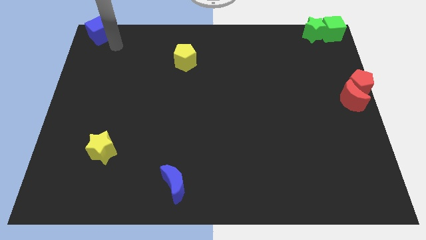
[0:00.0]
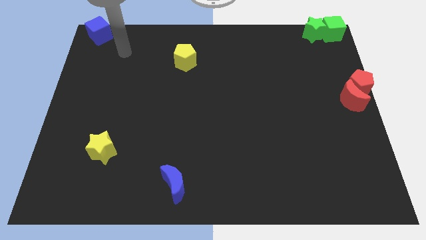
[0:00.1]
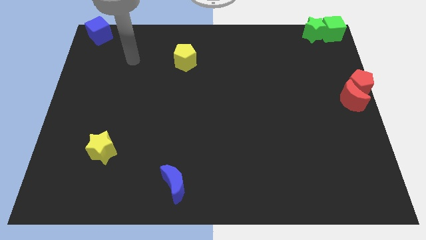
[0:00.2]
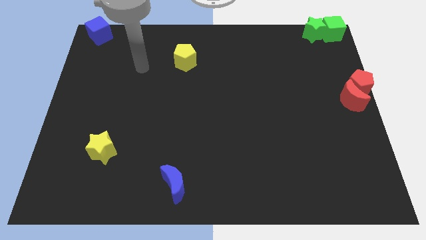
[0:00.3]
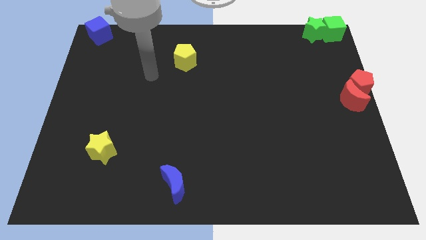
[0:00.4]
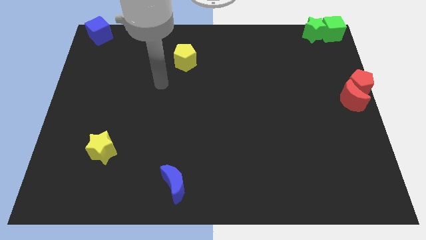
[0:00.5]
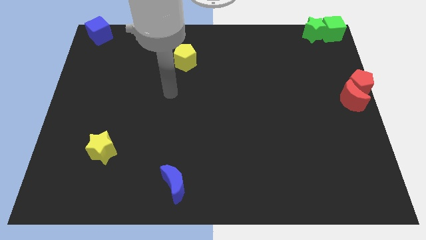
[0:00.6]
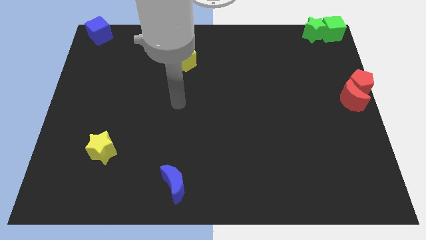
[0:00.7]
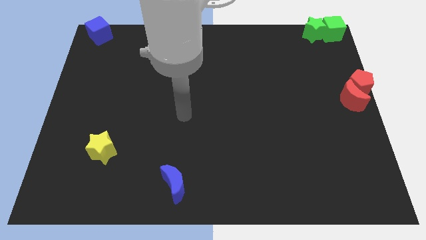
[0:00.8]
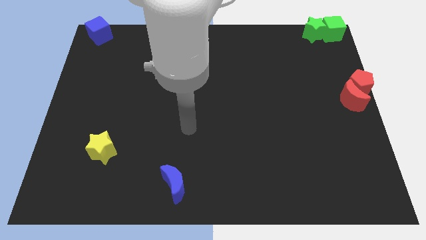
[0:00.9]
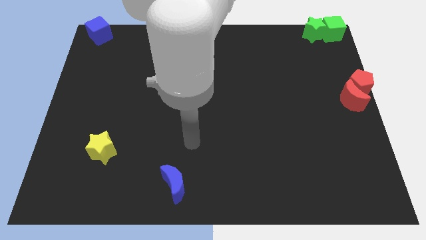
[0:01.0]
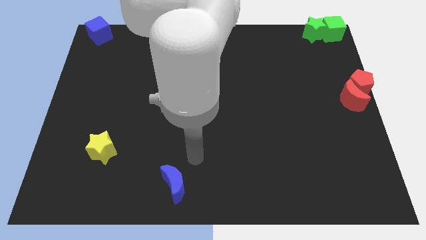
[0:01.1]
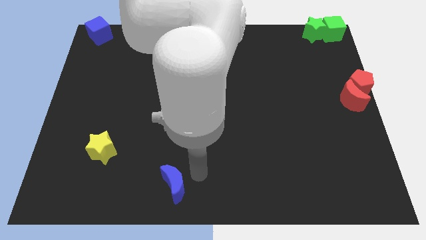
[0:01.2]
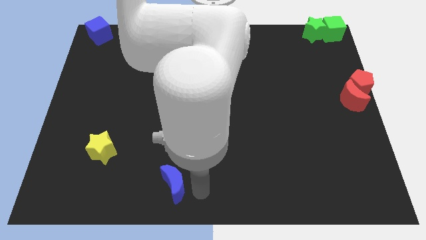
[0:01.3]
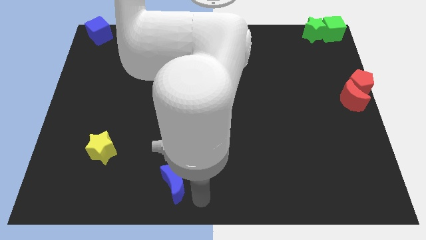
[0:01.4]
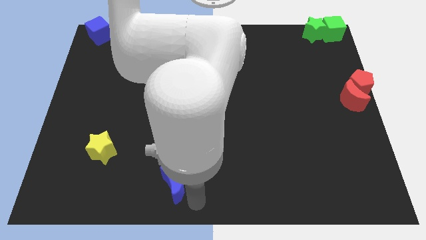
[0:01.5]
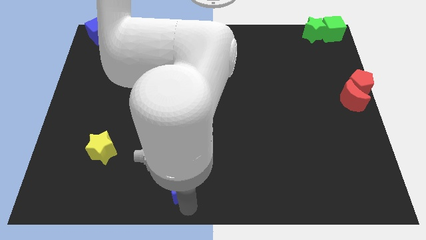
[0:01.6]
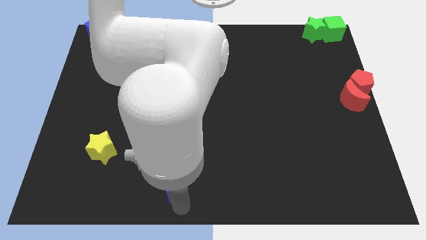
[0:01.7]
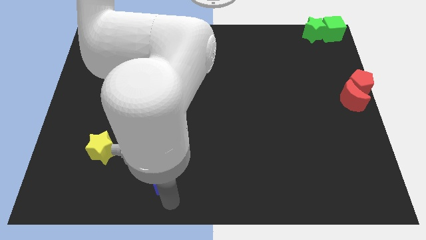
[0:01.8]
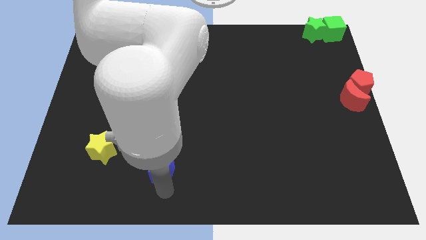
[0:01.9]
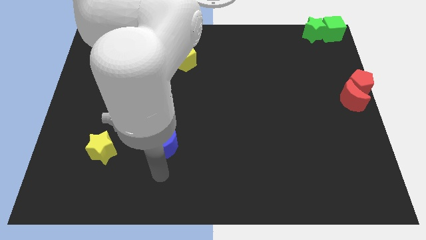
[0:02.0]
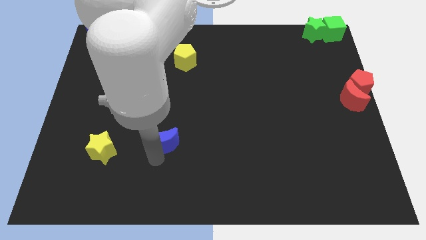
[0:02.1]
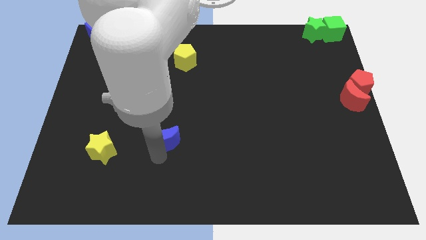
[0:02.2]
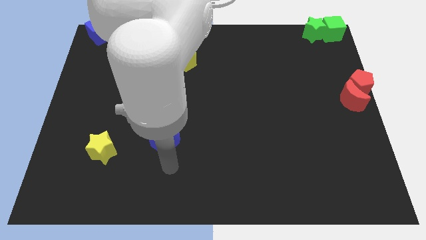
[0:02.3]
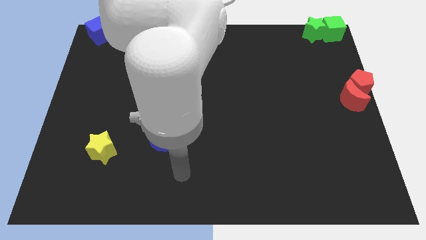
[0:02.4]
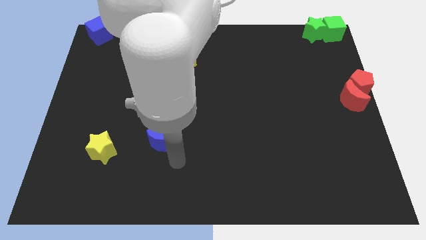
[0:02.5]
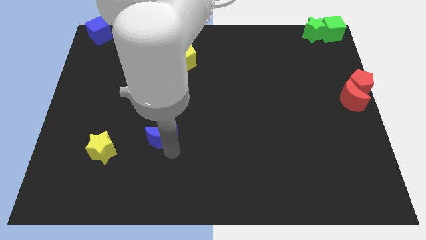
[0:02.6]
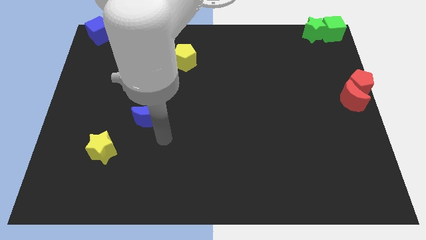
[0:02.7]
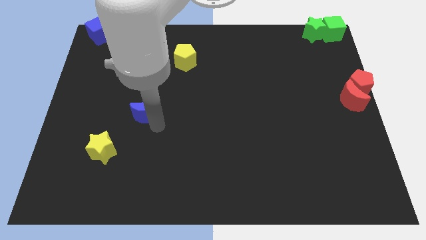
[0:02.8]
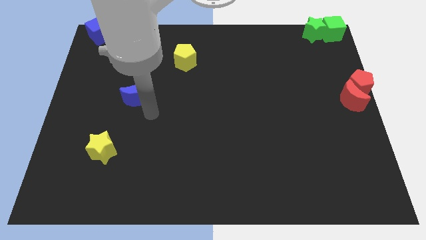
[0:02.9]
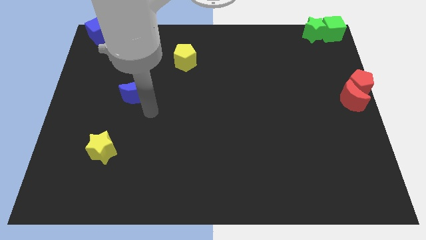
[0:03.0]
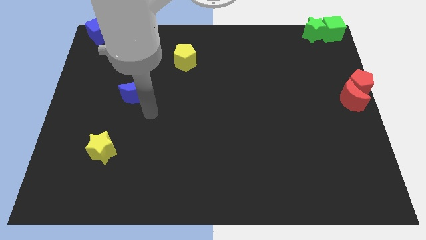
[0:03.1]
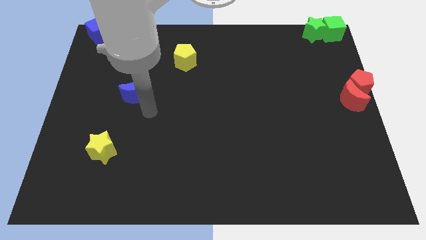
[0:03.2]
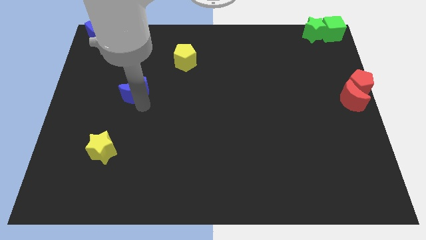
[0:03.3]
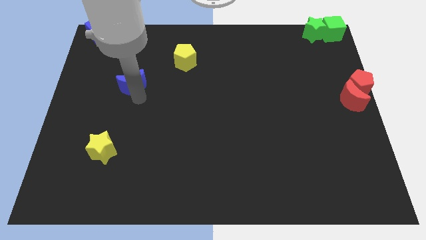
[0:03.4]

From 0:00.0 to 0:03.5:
place the blue crescent diagonally in between the yellow blocks

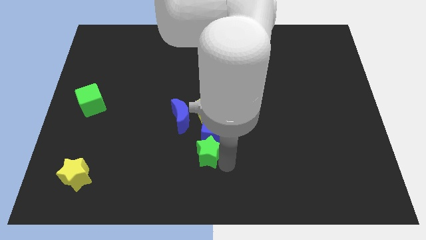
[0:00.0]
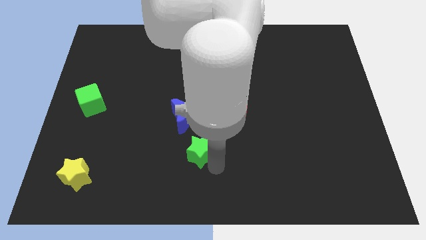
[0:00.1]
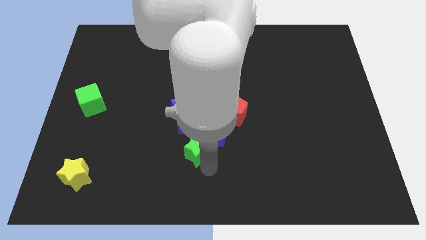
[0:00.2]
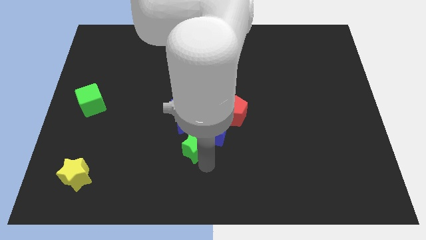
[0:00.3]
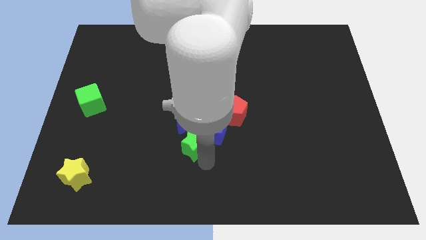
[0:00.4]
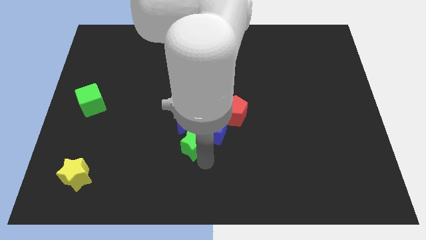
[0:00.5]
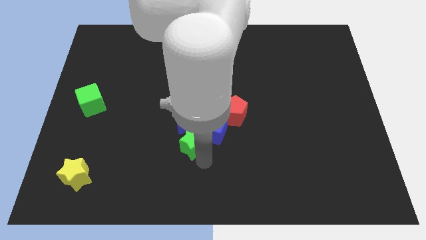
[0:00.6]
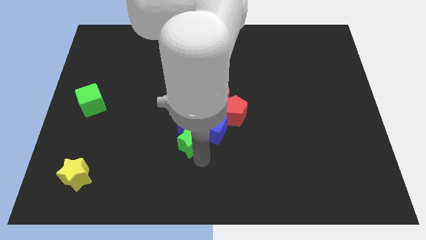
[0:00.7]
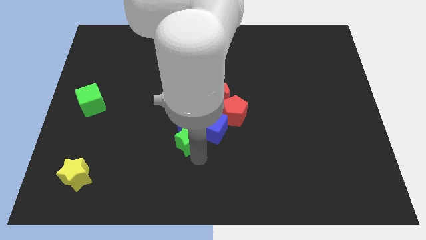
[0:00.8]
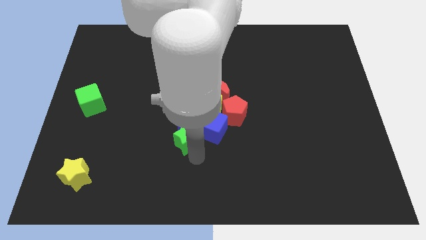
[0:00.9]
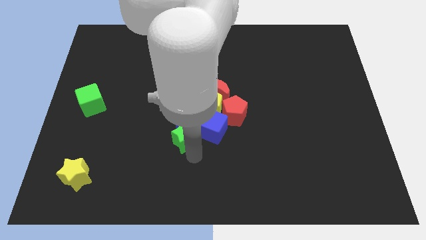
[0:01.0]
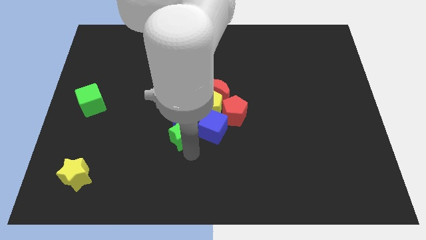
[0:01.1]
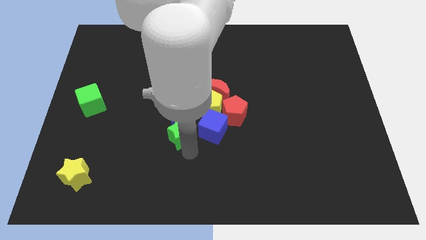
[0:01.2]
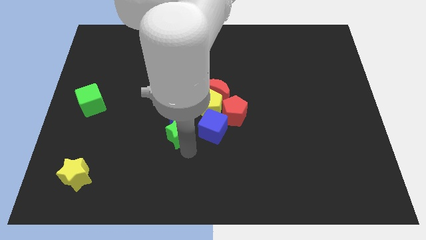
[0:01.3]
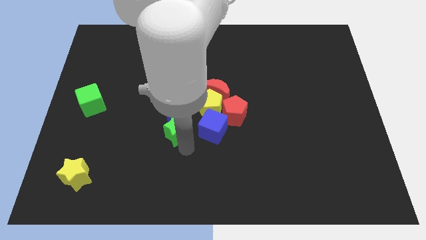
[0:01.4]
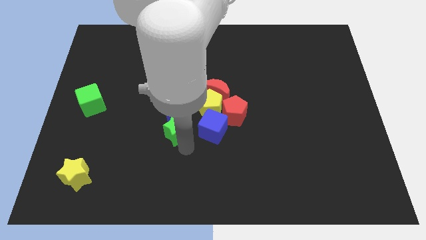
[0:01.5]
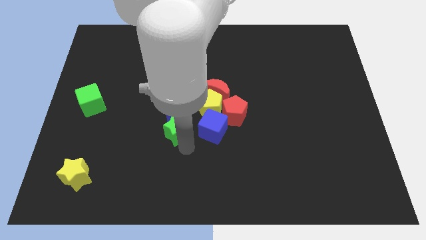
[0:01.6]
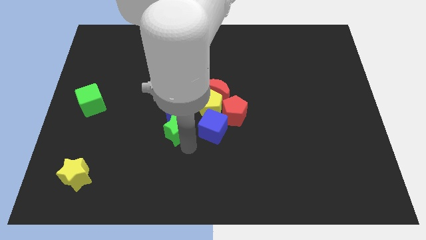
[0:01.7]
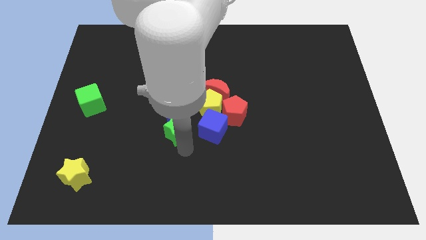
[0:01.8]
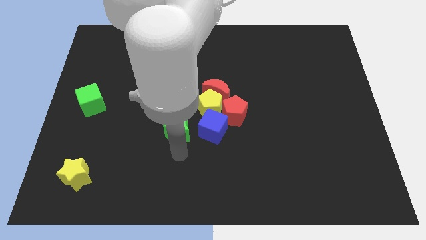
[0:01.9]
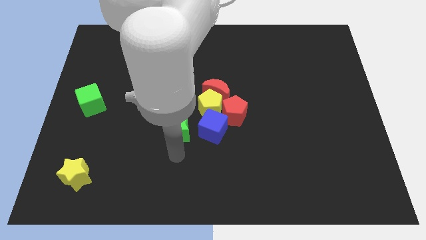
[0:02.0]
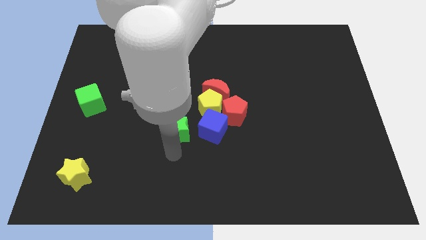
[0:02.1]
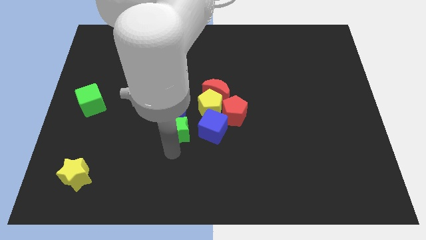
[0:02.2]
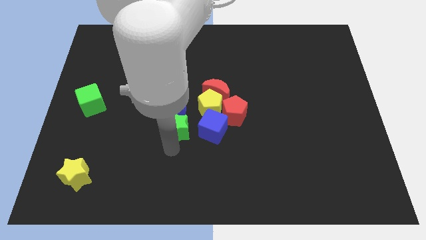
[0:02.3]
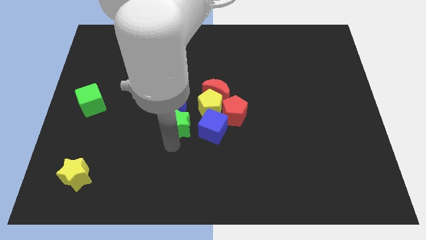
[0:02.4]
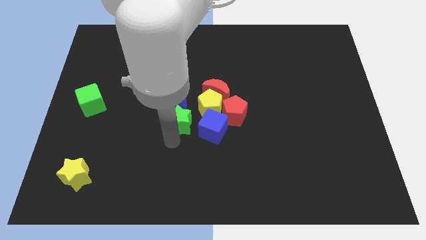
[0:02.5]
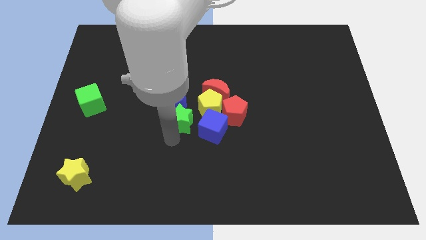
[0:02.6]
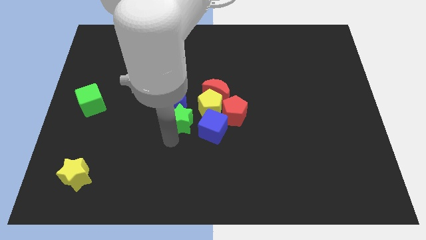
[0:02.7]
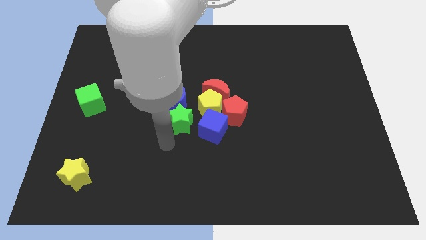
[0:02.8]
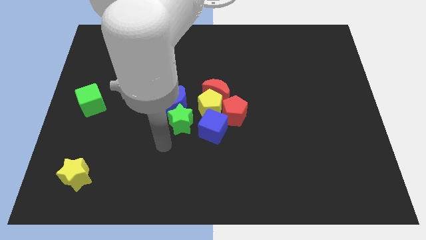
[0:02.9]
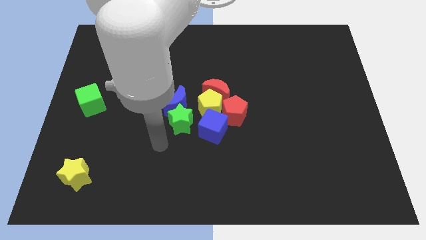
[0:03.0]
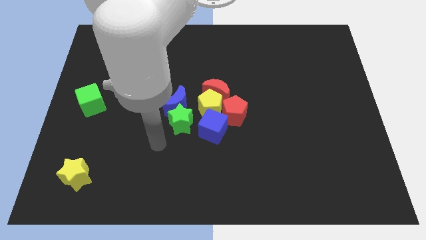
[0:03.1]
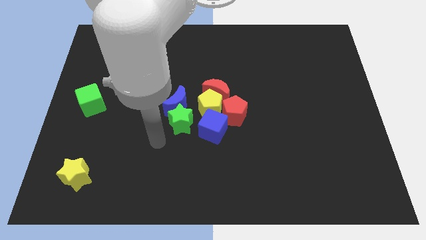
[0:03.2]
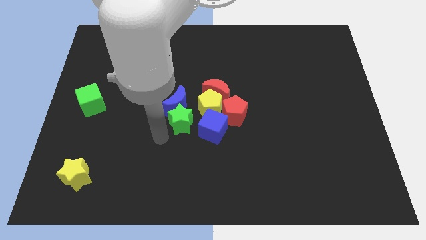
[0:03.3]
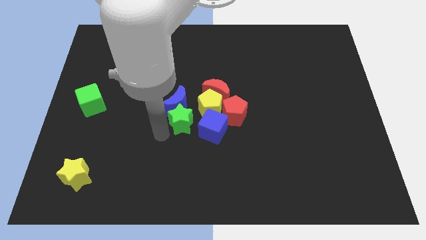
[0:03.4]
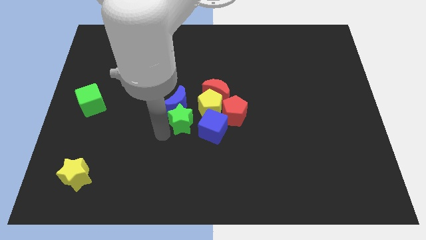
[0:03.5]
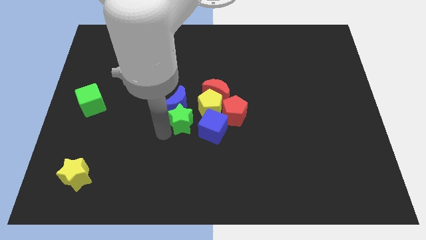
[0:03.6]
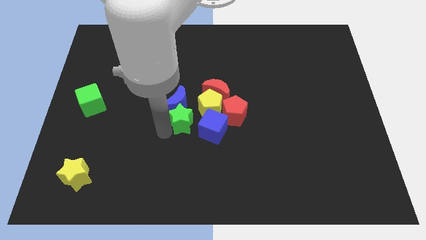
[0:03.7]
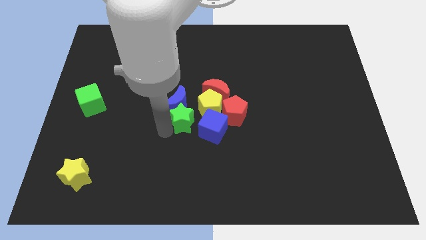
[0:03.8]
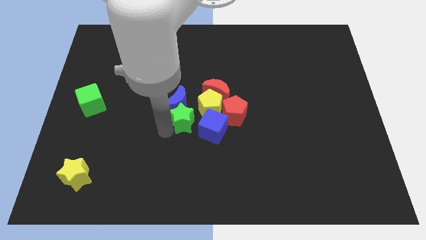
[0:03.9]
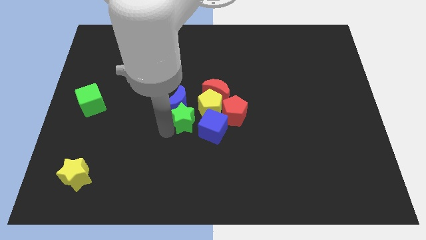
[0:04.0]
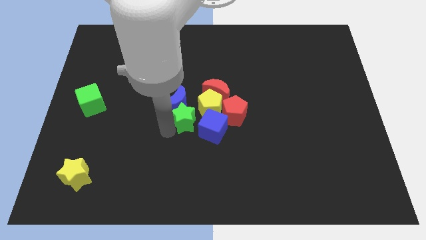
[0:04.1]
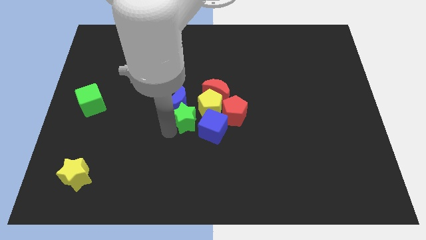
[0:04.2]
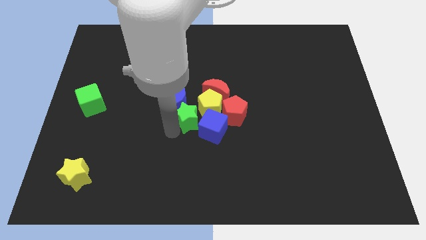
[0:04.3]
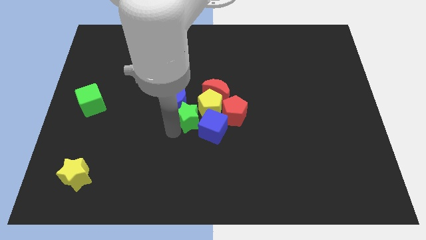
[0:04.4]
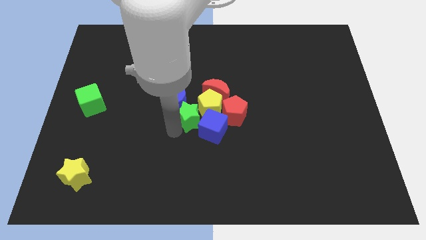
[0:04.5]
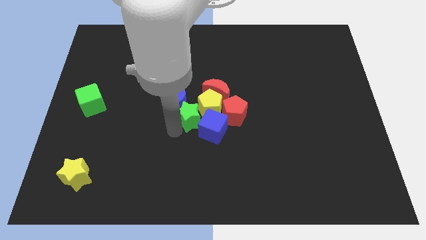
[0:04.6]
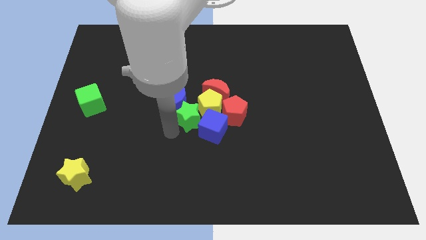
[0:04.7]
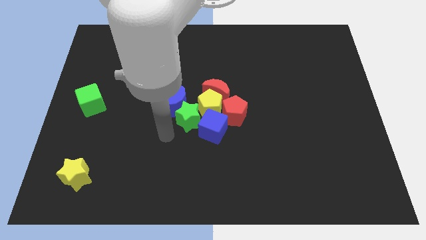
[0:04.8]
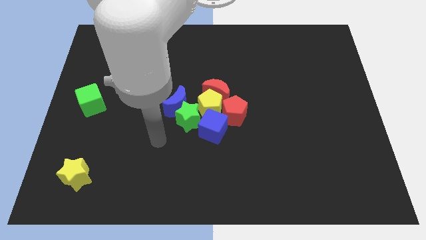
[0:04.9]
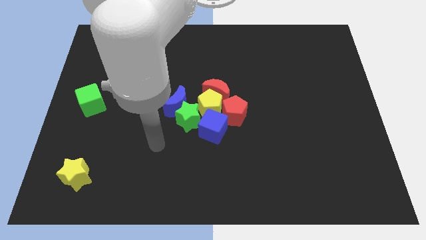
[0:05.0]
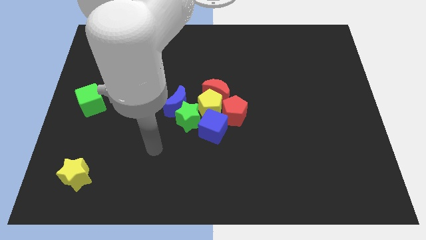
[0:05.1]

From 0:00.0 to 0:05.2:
move the green star into the yellow pentagon

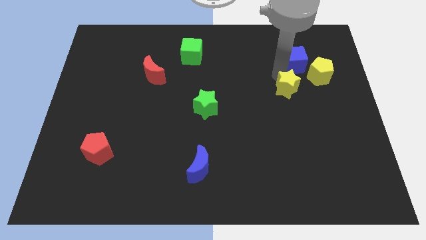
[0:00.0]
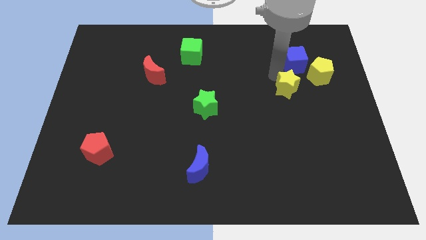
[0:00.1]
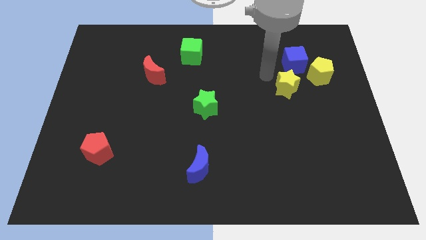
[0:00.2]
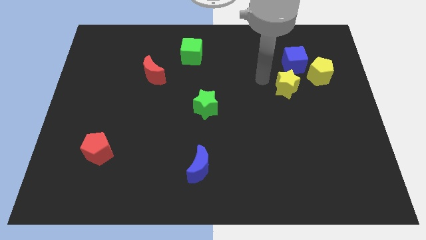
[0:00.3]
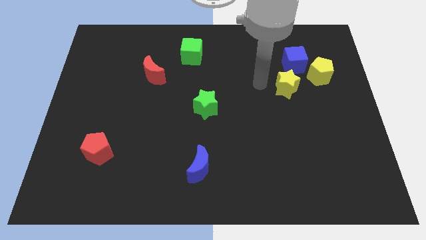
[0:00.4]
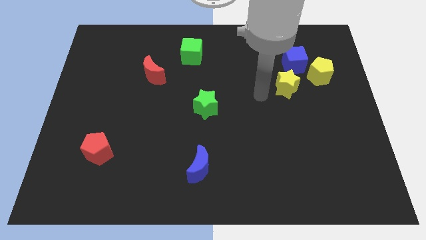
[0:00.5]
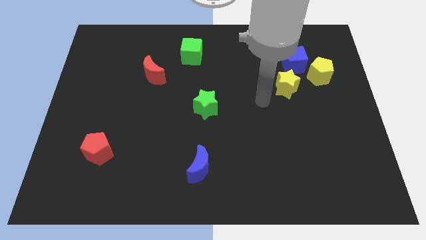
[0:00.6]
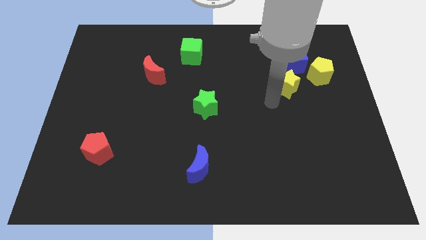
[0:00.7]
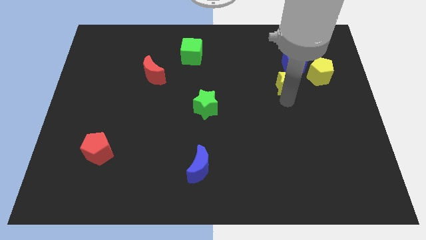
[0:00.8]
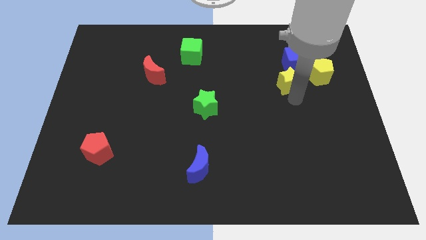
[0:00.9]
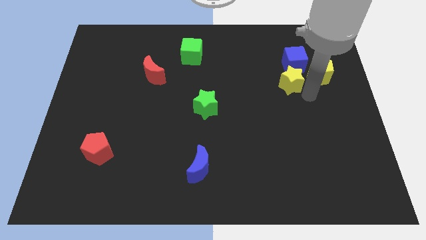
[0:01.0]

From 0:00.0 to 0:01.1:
move yellow star below left to blue cube
